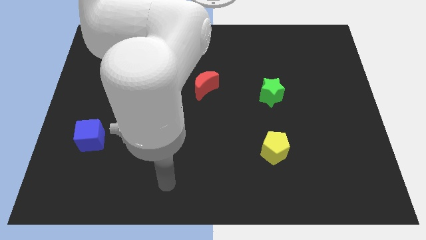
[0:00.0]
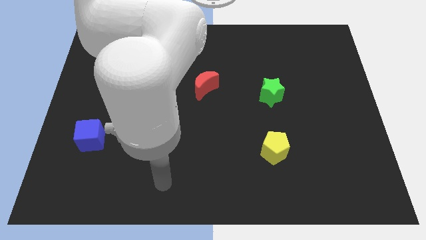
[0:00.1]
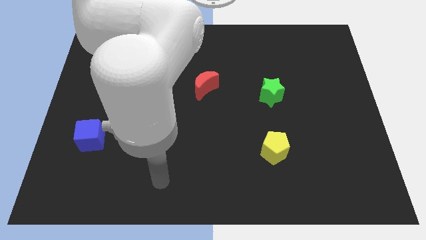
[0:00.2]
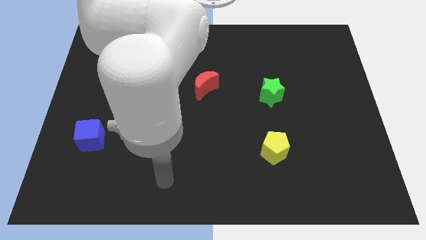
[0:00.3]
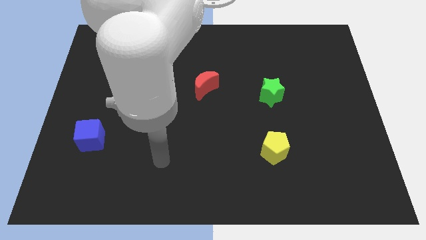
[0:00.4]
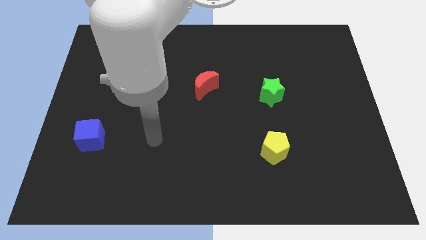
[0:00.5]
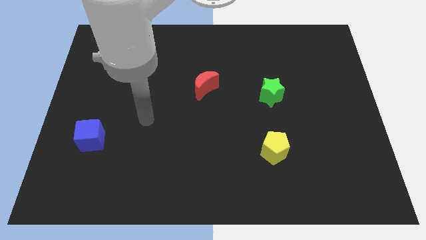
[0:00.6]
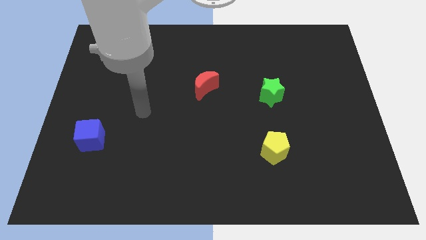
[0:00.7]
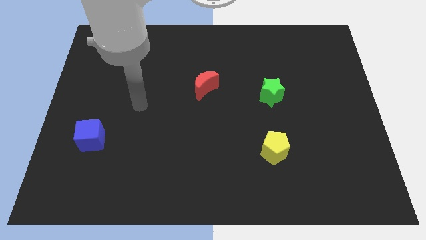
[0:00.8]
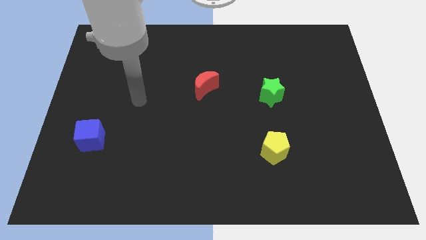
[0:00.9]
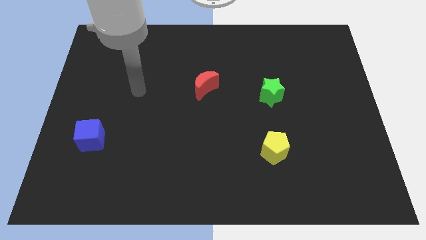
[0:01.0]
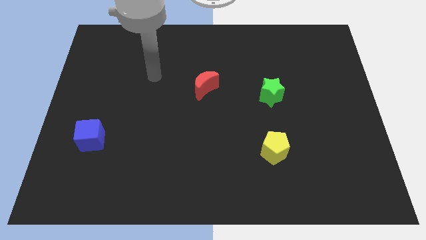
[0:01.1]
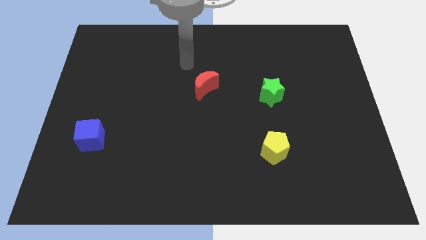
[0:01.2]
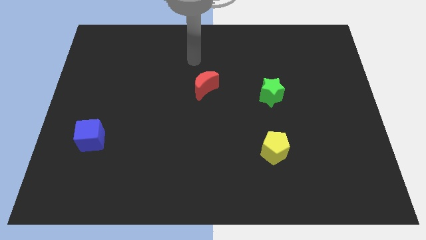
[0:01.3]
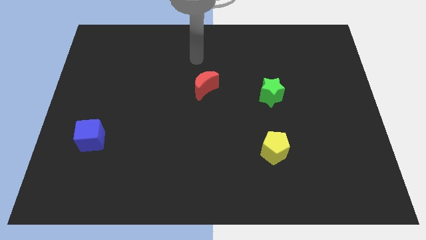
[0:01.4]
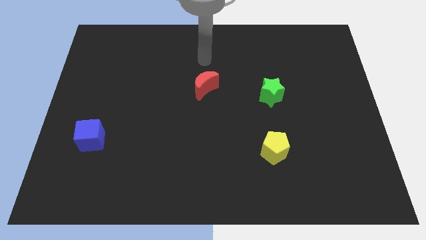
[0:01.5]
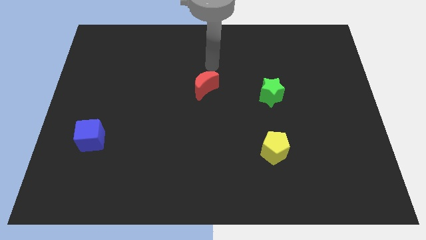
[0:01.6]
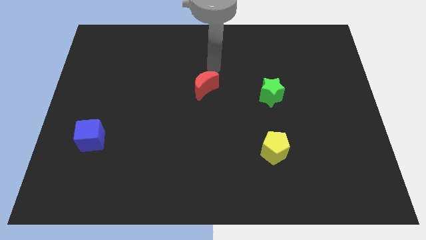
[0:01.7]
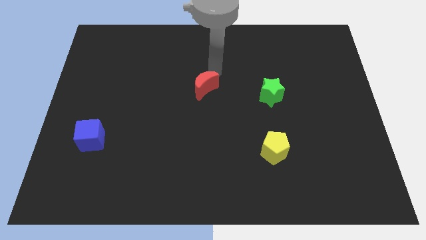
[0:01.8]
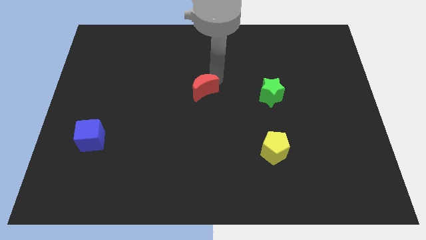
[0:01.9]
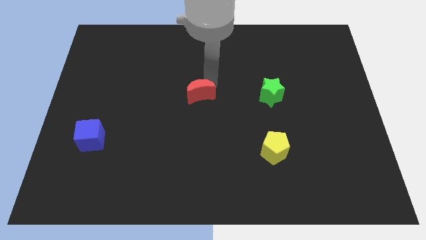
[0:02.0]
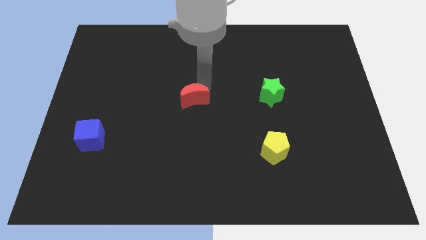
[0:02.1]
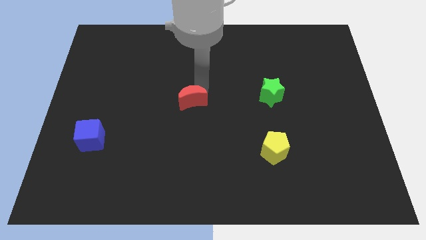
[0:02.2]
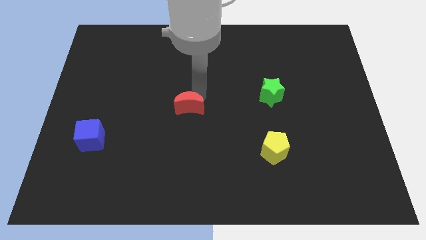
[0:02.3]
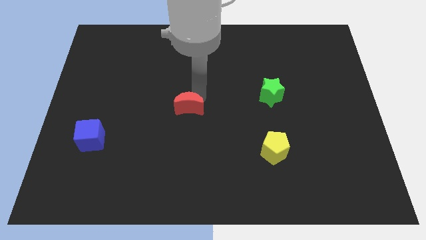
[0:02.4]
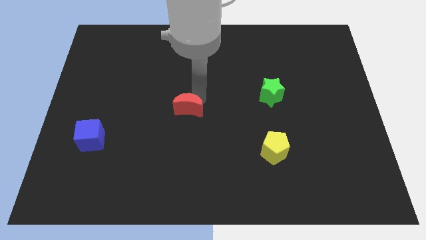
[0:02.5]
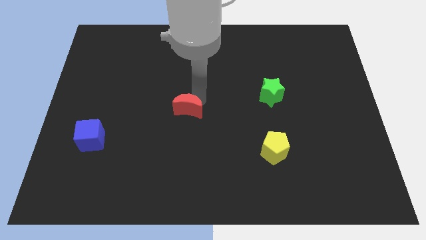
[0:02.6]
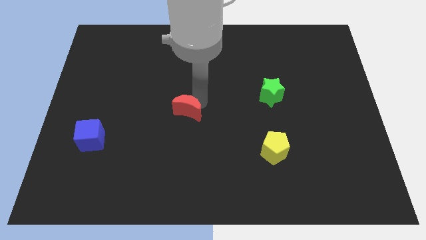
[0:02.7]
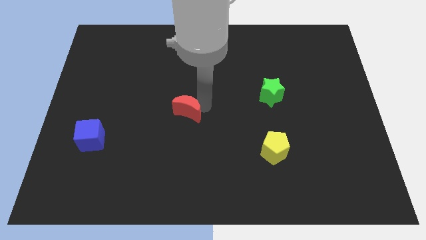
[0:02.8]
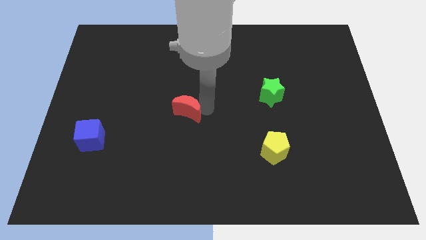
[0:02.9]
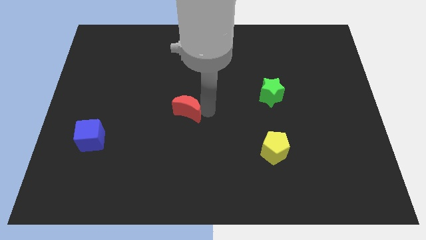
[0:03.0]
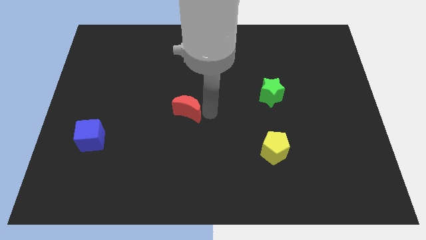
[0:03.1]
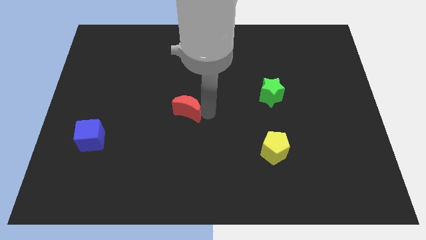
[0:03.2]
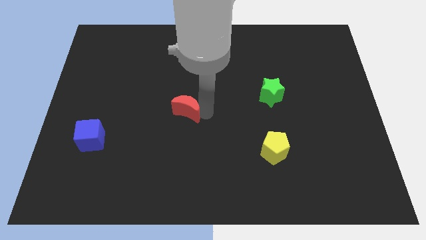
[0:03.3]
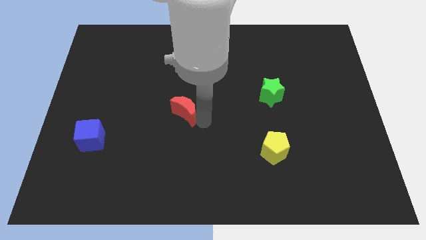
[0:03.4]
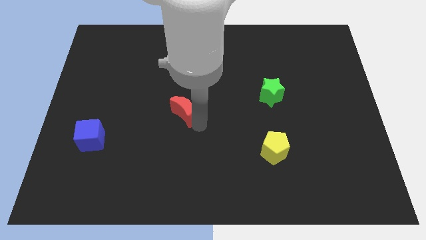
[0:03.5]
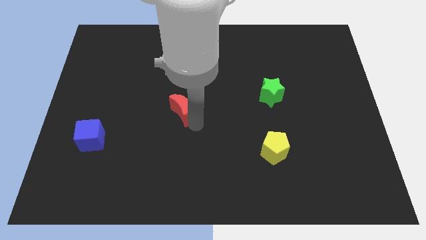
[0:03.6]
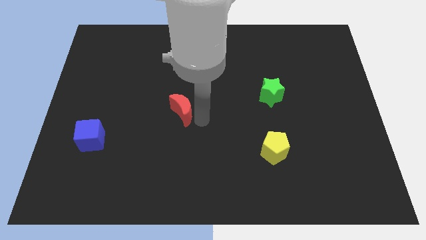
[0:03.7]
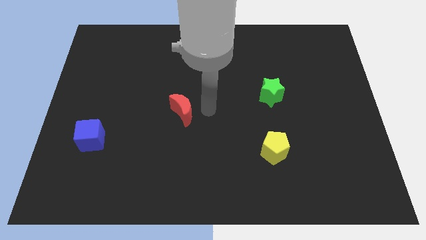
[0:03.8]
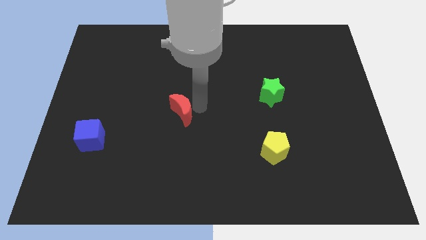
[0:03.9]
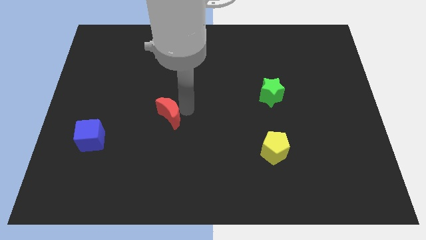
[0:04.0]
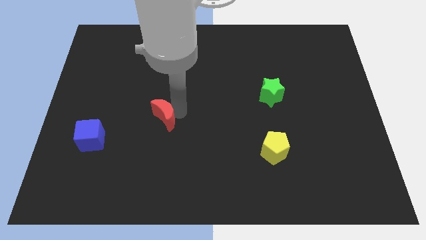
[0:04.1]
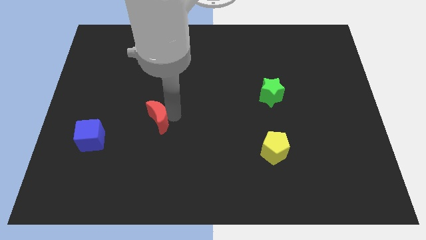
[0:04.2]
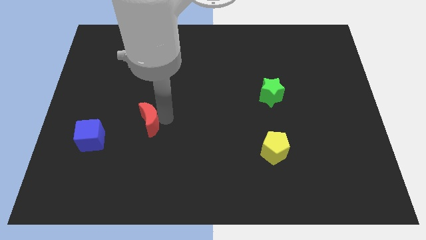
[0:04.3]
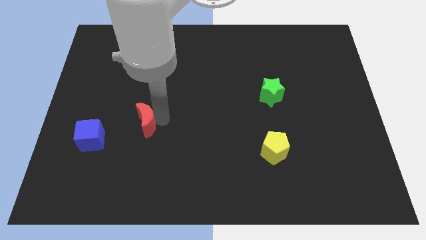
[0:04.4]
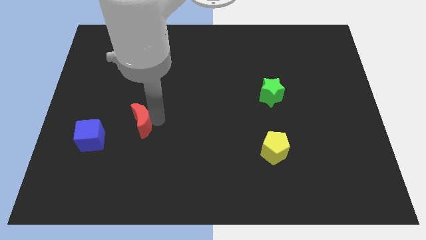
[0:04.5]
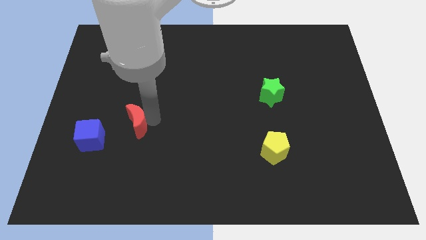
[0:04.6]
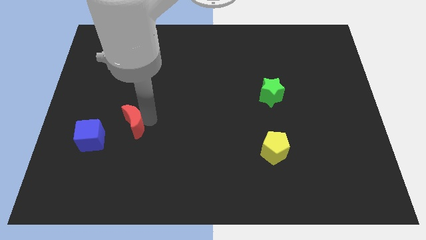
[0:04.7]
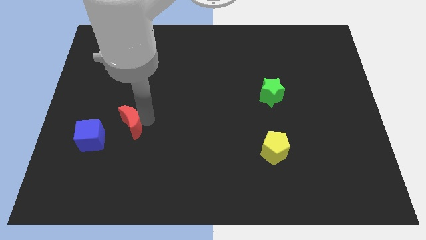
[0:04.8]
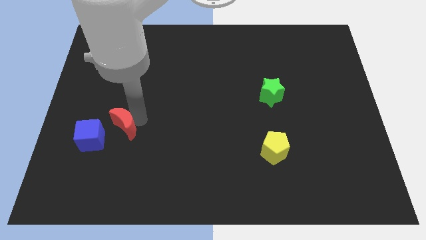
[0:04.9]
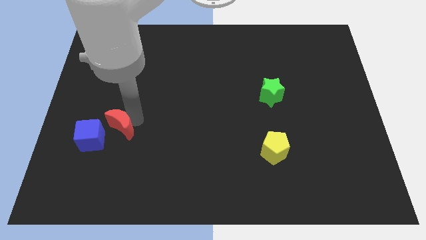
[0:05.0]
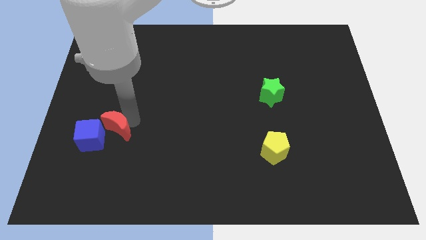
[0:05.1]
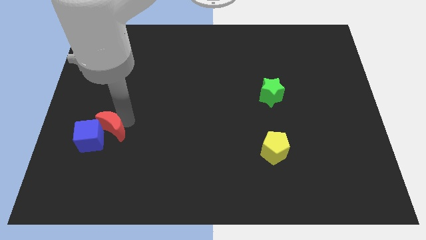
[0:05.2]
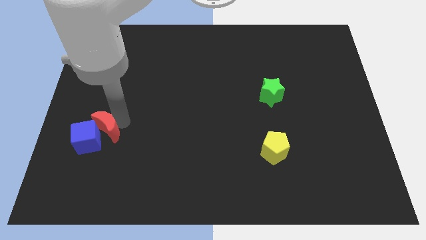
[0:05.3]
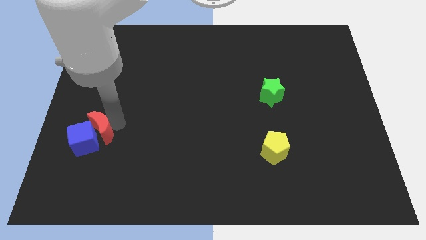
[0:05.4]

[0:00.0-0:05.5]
slide the red block to the blue cube

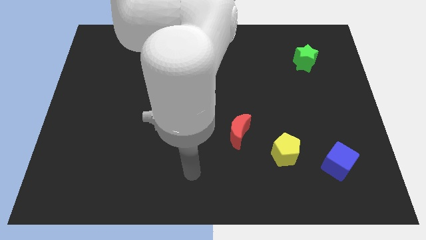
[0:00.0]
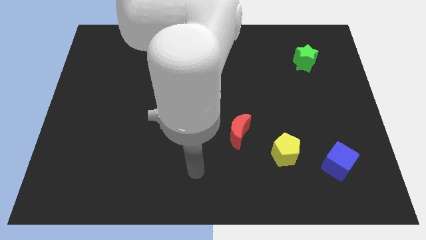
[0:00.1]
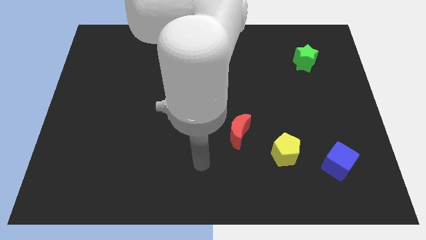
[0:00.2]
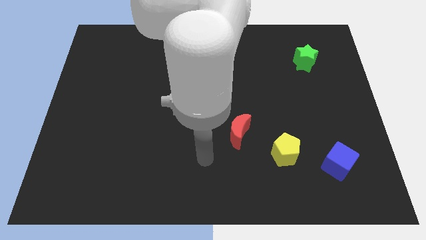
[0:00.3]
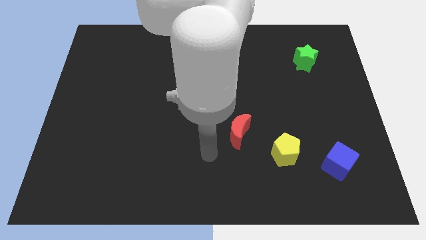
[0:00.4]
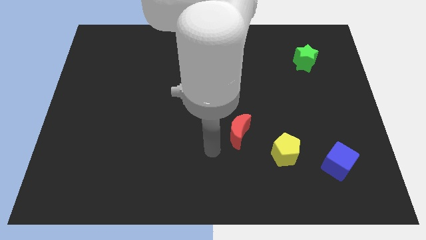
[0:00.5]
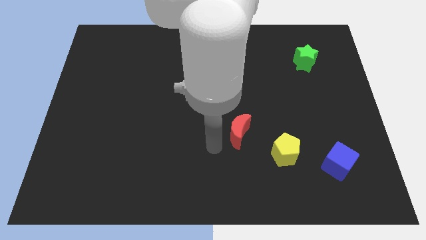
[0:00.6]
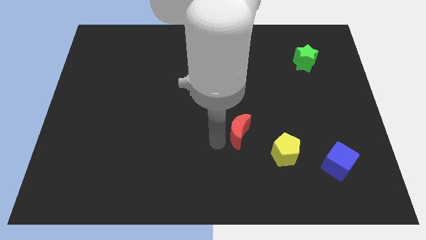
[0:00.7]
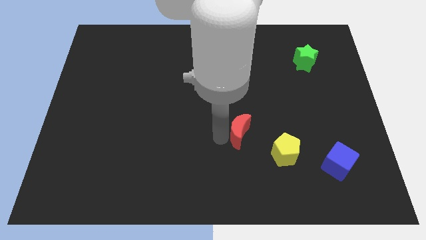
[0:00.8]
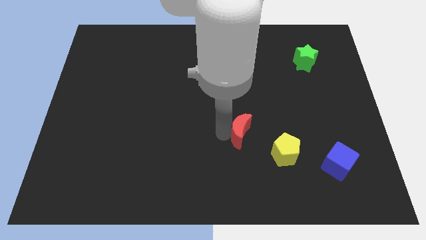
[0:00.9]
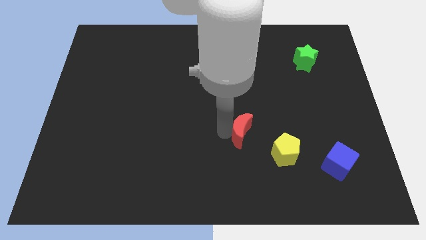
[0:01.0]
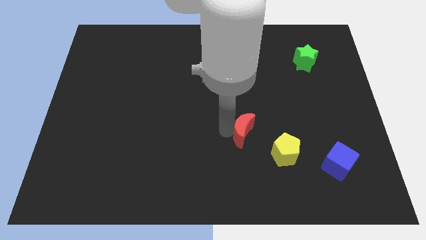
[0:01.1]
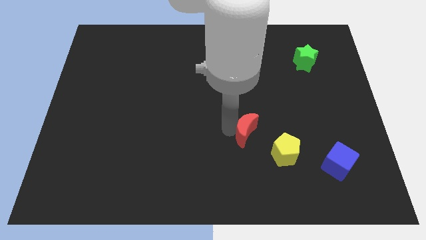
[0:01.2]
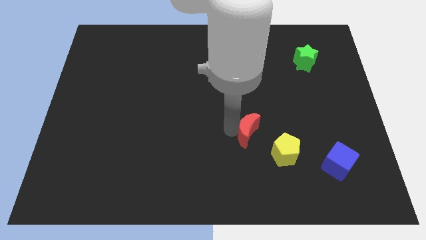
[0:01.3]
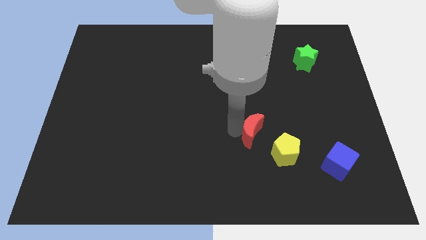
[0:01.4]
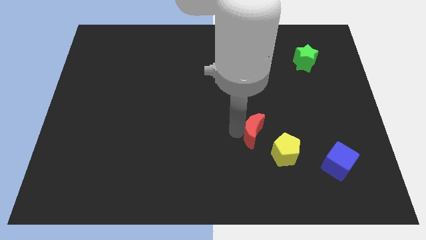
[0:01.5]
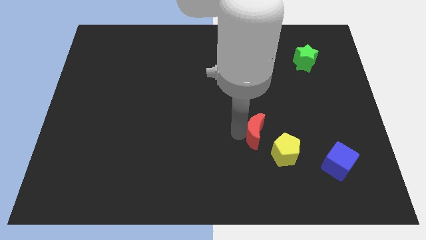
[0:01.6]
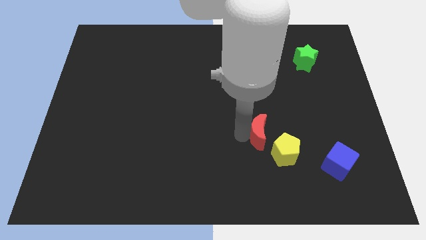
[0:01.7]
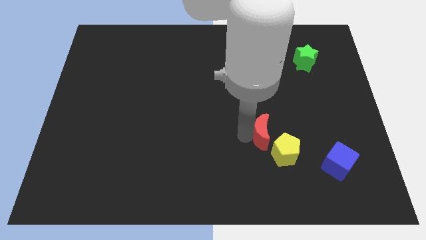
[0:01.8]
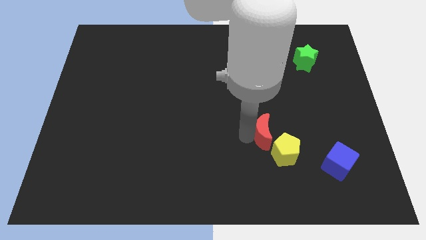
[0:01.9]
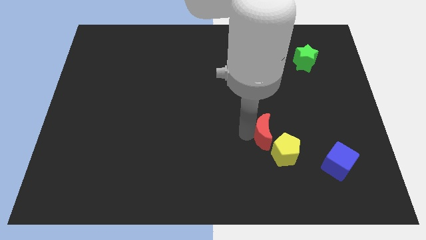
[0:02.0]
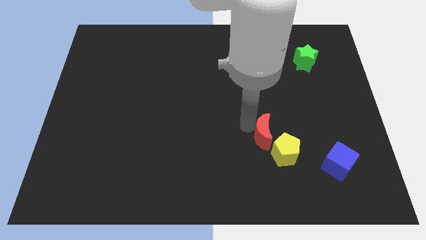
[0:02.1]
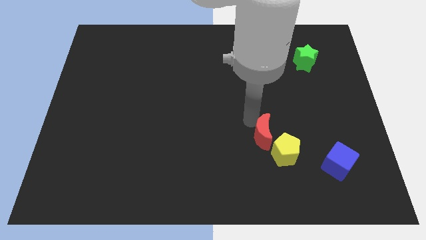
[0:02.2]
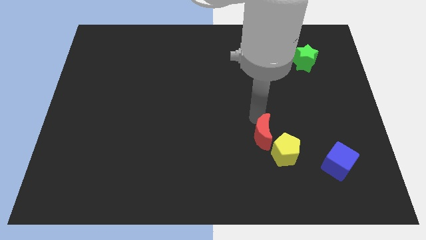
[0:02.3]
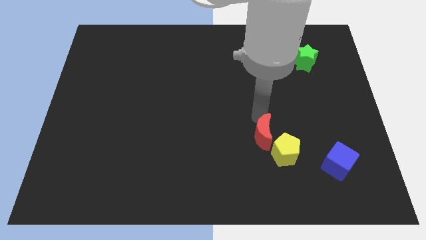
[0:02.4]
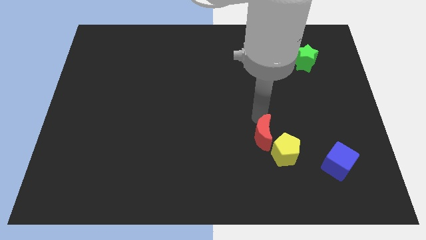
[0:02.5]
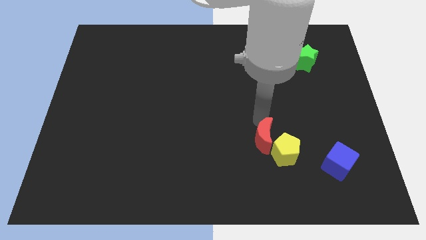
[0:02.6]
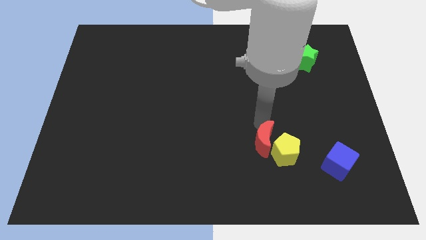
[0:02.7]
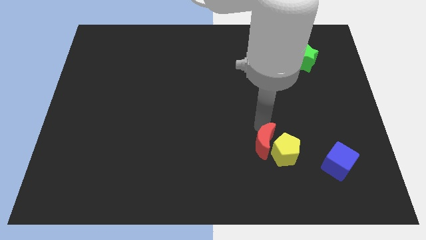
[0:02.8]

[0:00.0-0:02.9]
move the red block towards the yellow block

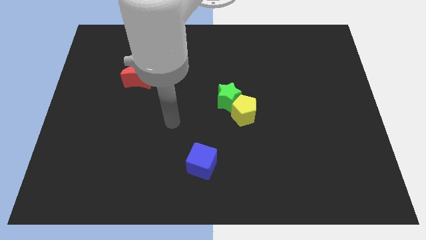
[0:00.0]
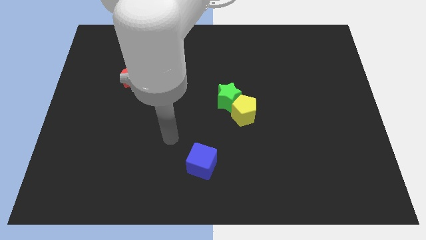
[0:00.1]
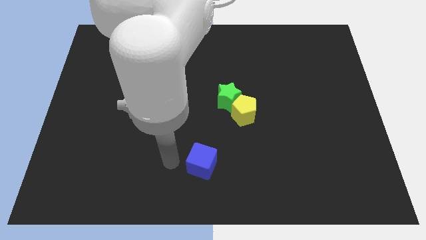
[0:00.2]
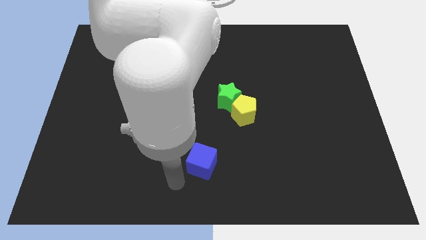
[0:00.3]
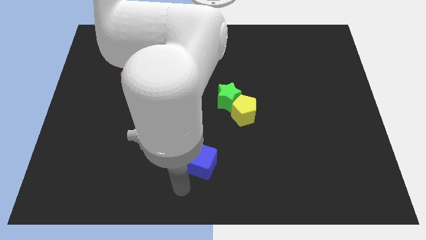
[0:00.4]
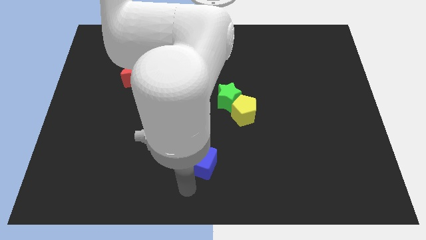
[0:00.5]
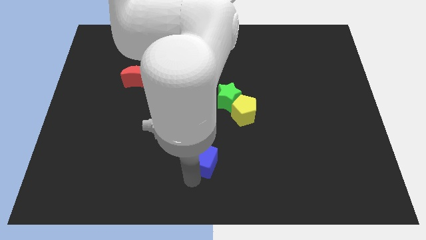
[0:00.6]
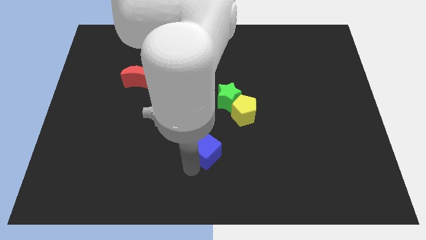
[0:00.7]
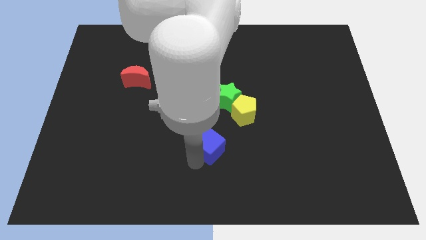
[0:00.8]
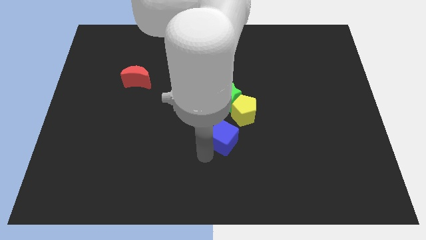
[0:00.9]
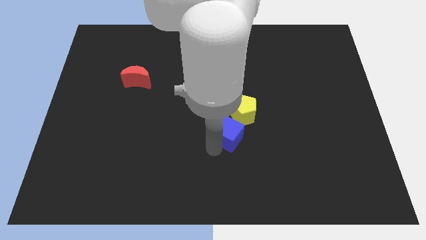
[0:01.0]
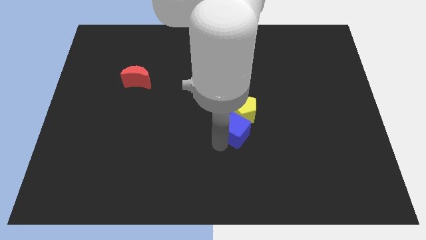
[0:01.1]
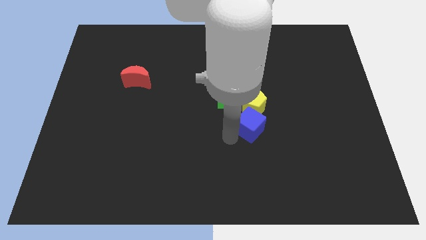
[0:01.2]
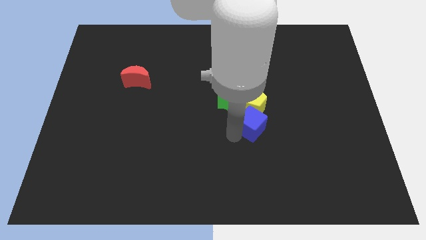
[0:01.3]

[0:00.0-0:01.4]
push the cube towards the pentagon
